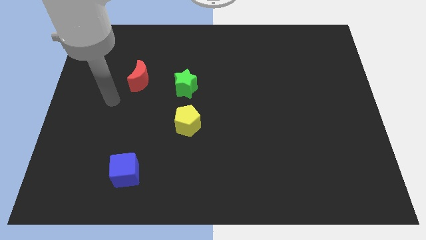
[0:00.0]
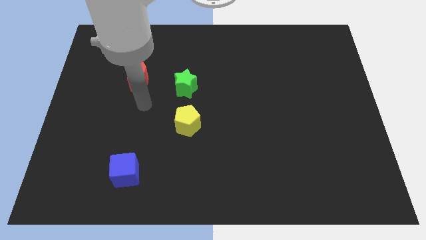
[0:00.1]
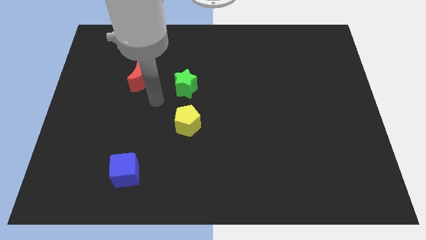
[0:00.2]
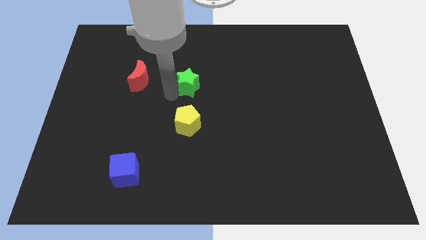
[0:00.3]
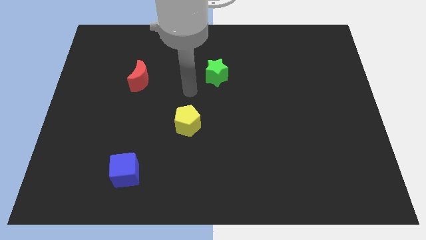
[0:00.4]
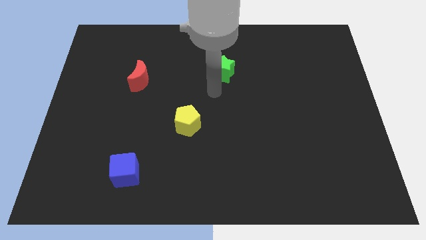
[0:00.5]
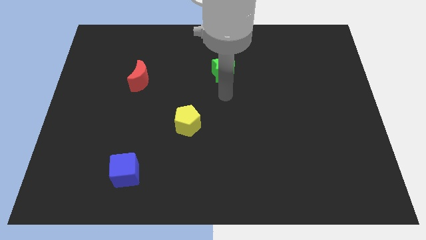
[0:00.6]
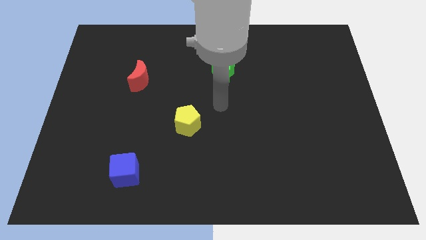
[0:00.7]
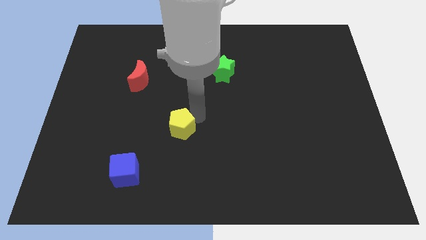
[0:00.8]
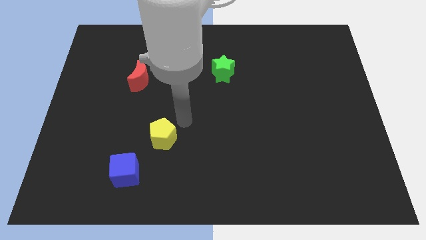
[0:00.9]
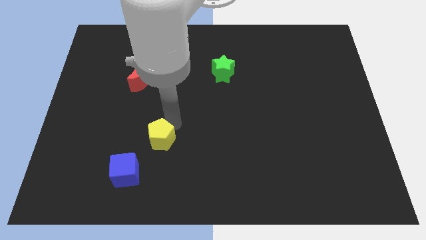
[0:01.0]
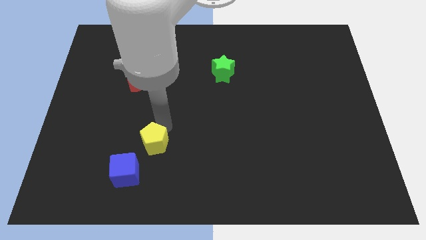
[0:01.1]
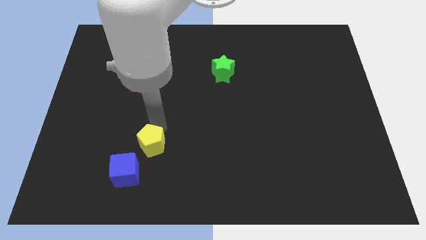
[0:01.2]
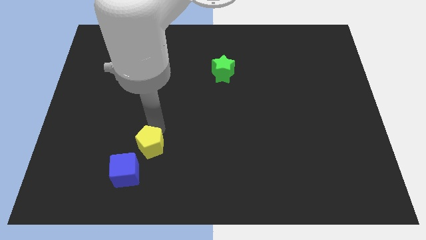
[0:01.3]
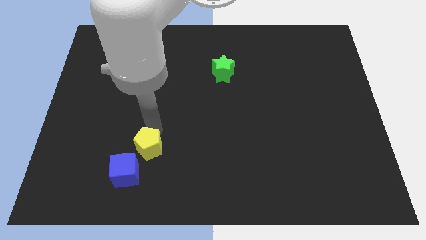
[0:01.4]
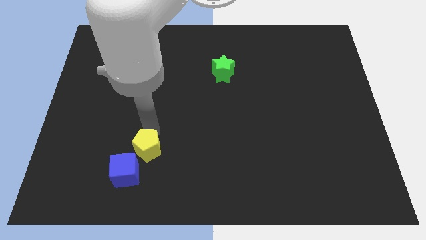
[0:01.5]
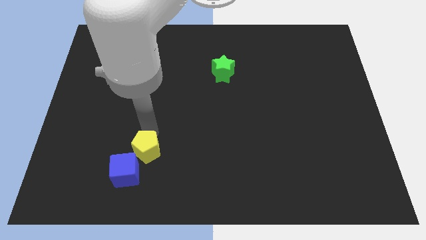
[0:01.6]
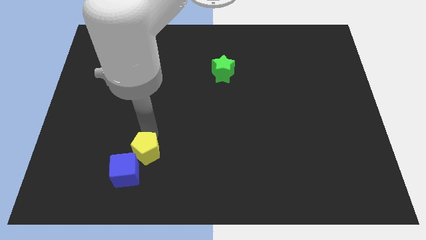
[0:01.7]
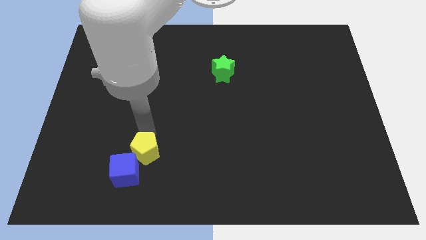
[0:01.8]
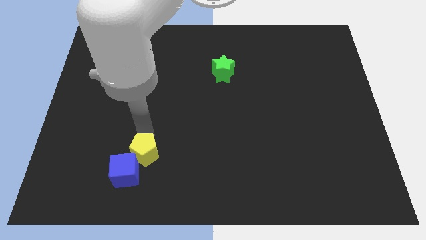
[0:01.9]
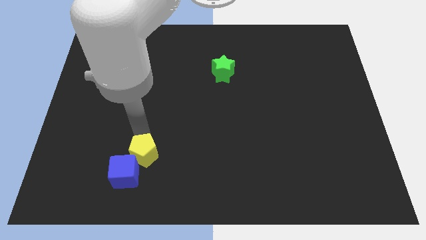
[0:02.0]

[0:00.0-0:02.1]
push the yellow block close to the blue block

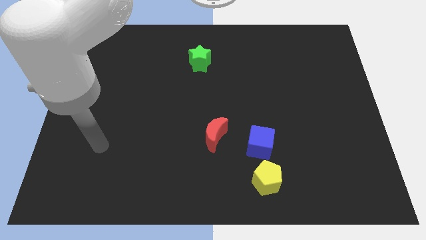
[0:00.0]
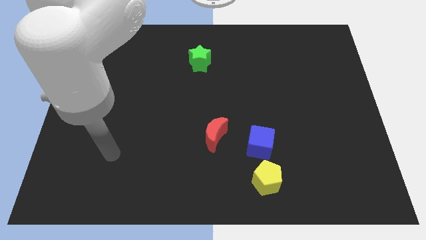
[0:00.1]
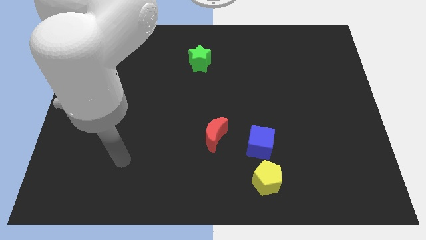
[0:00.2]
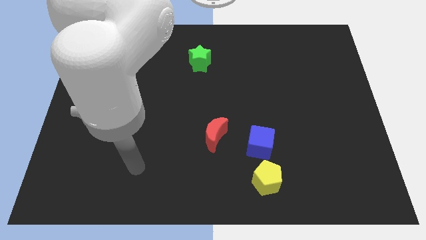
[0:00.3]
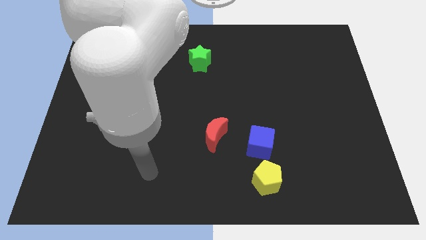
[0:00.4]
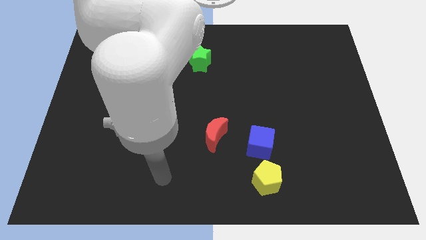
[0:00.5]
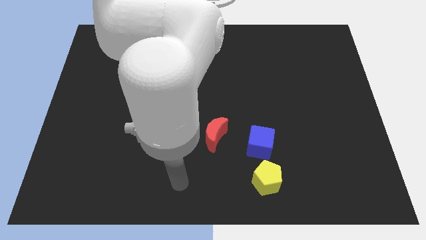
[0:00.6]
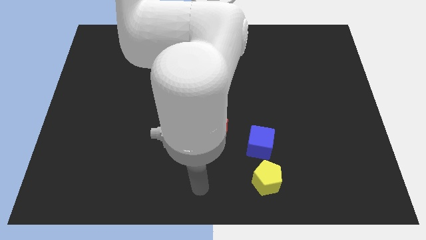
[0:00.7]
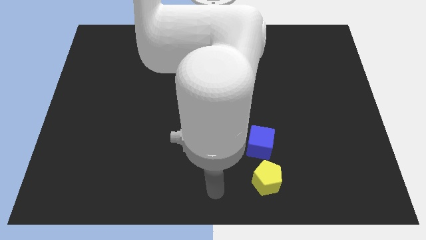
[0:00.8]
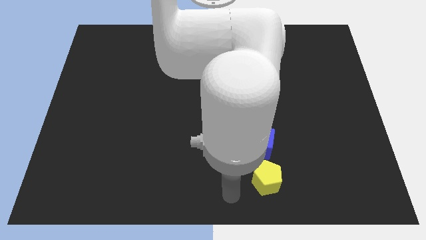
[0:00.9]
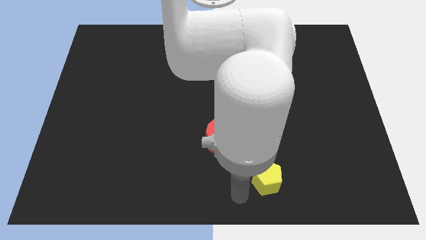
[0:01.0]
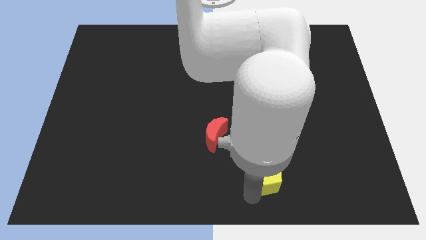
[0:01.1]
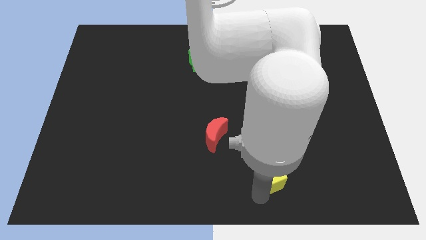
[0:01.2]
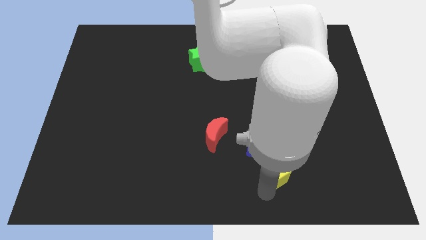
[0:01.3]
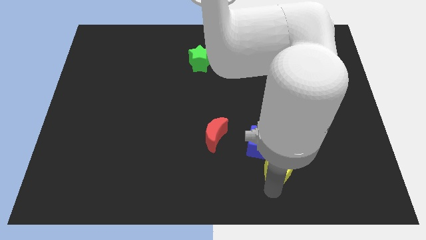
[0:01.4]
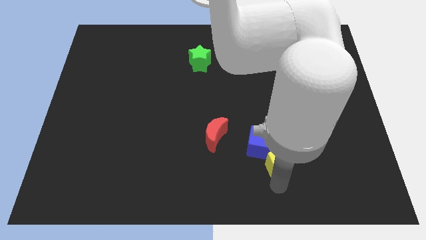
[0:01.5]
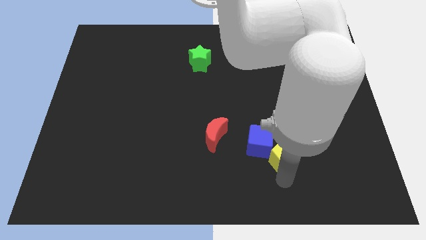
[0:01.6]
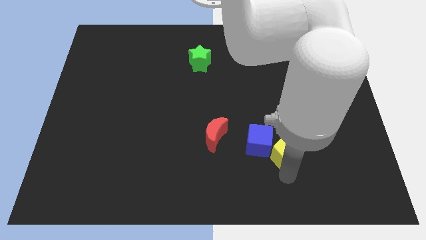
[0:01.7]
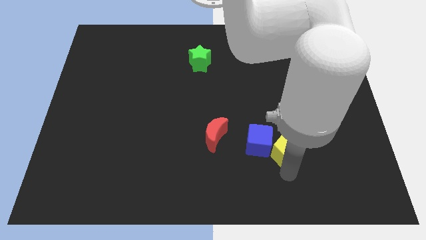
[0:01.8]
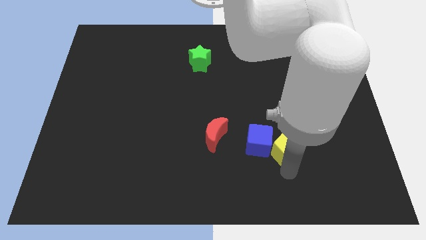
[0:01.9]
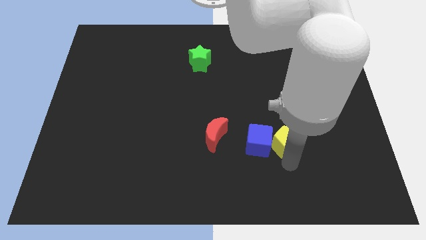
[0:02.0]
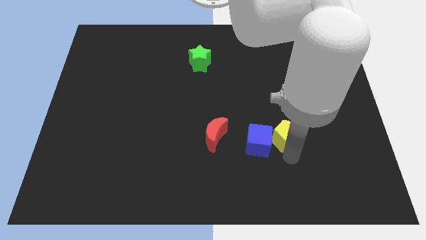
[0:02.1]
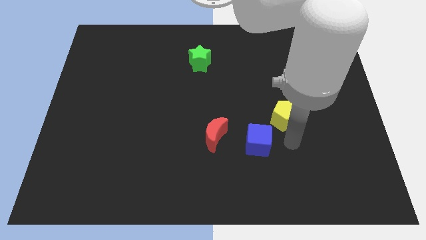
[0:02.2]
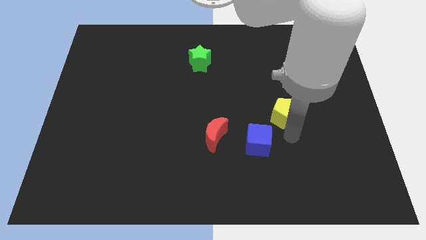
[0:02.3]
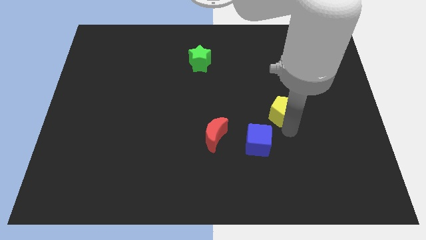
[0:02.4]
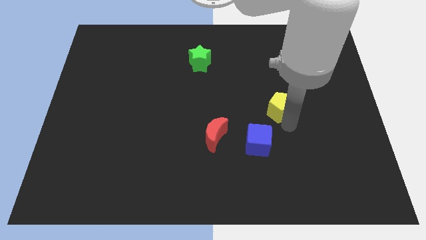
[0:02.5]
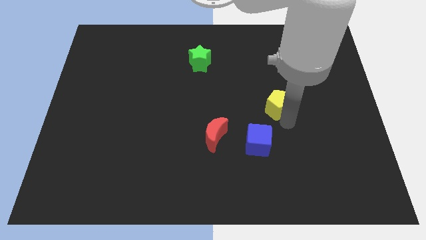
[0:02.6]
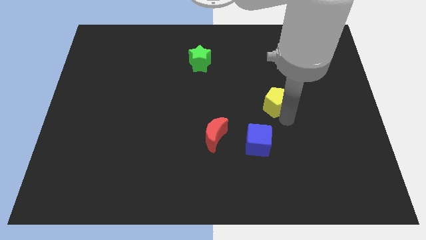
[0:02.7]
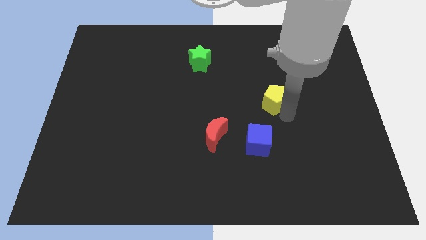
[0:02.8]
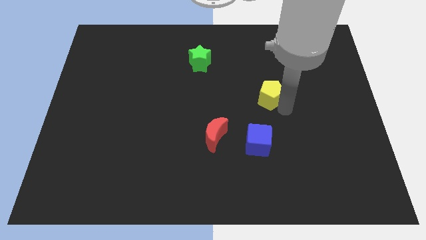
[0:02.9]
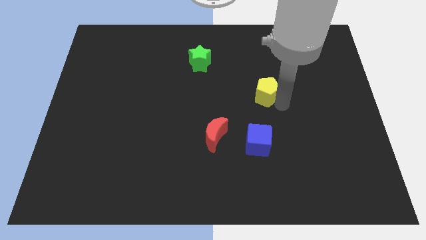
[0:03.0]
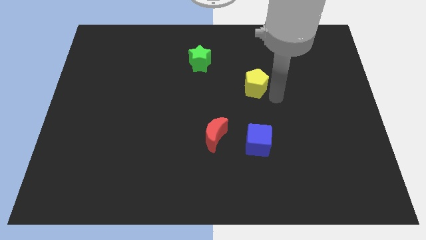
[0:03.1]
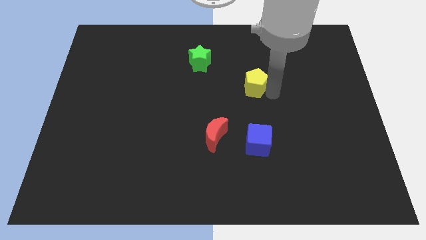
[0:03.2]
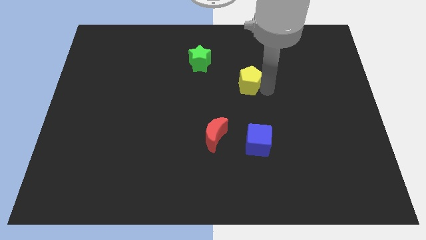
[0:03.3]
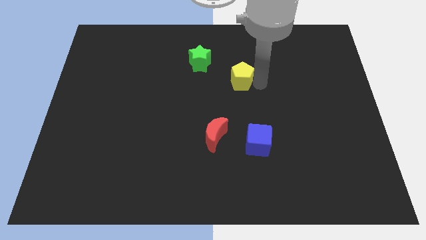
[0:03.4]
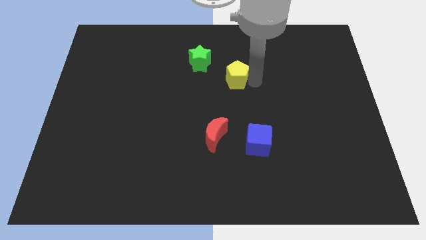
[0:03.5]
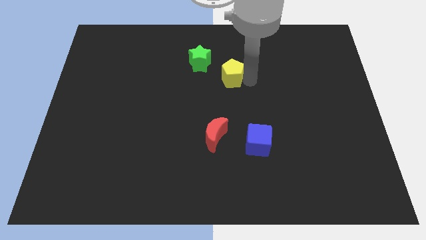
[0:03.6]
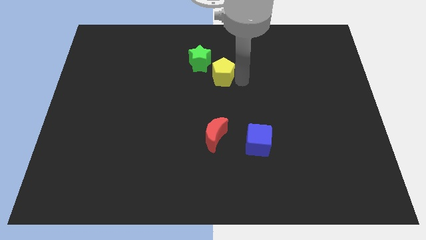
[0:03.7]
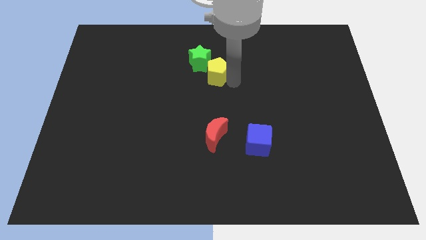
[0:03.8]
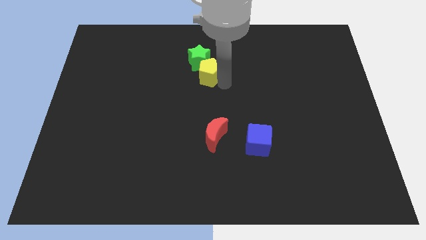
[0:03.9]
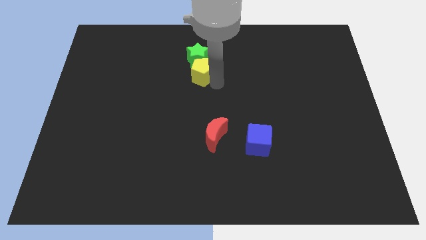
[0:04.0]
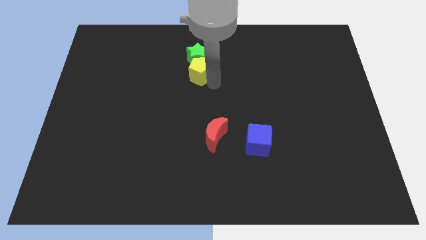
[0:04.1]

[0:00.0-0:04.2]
put the yellow pentagon close to the green star

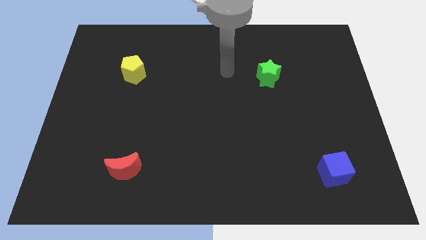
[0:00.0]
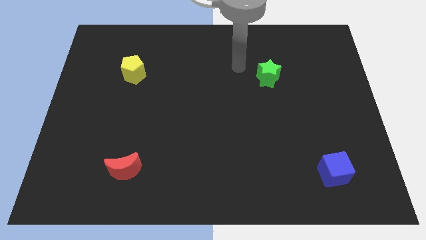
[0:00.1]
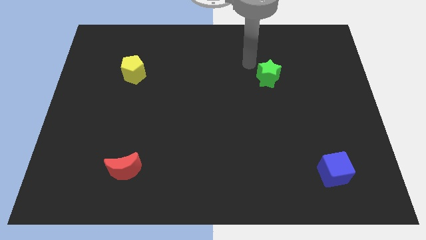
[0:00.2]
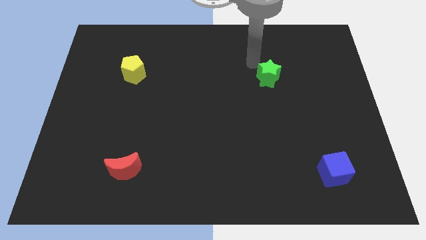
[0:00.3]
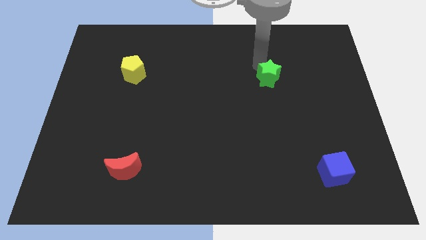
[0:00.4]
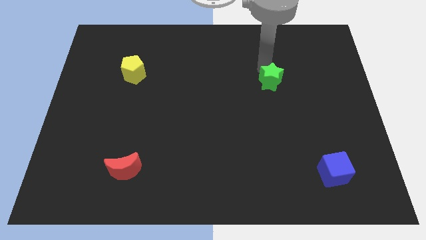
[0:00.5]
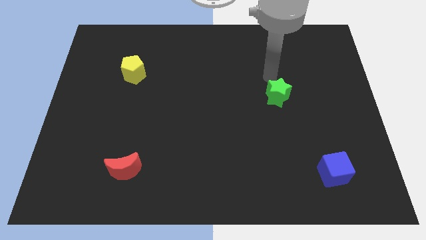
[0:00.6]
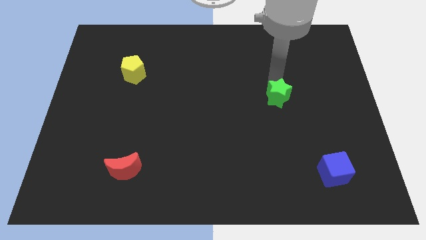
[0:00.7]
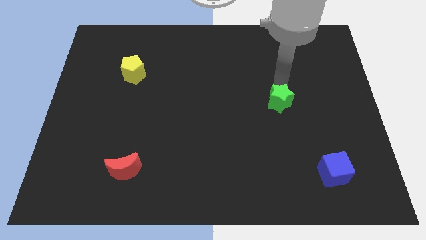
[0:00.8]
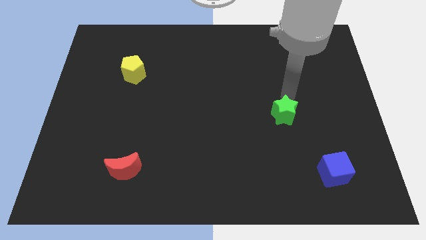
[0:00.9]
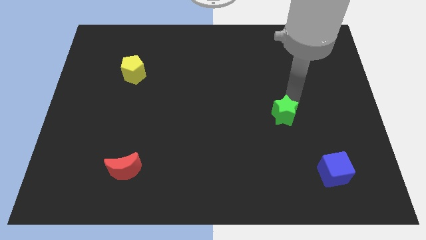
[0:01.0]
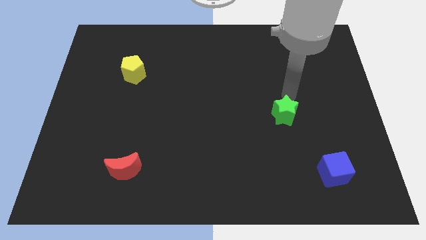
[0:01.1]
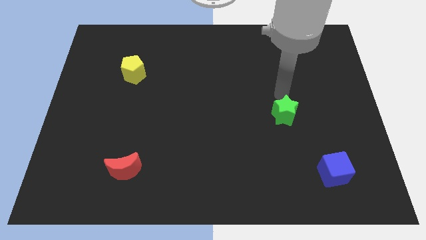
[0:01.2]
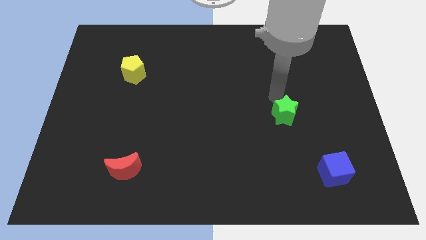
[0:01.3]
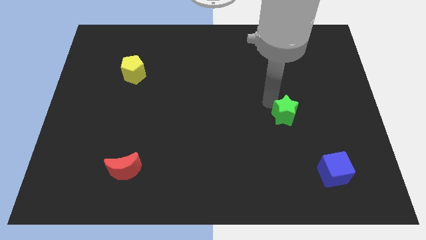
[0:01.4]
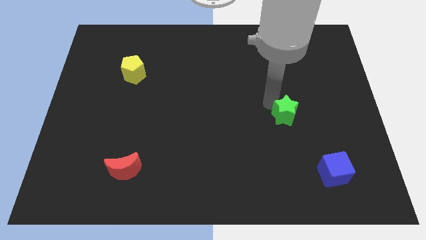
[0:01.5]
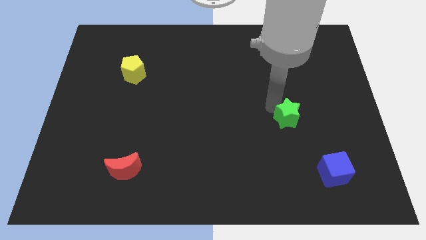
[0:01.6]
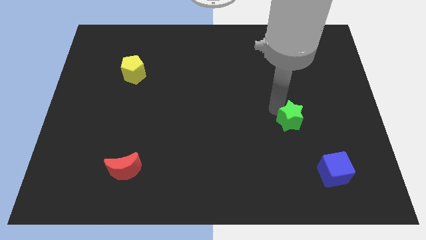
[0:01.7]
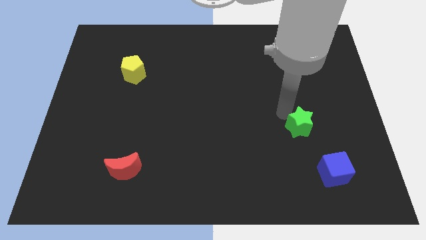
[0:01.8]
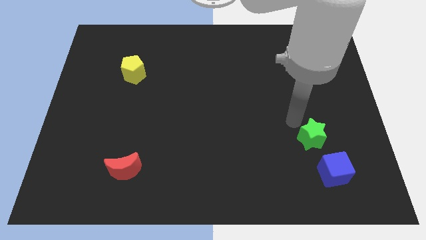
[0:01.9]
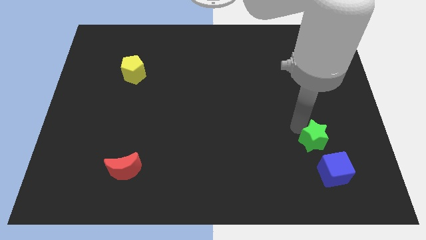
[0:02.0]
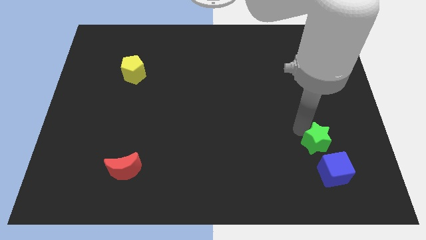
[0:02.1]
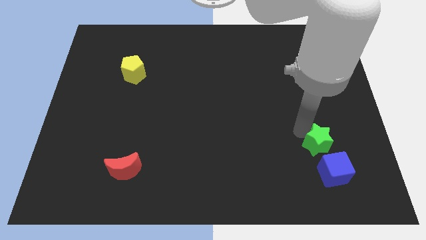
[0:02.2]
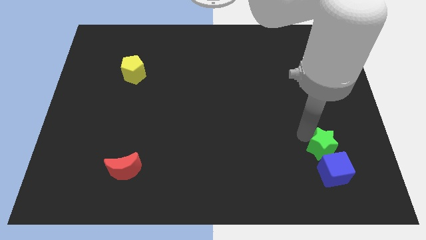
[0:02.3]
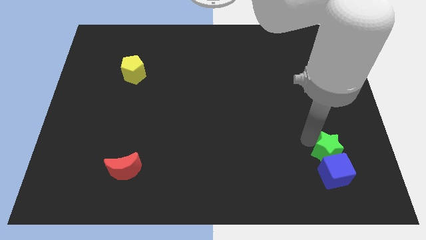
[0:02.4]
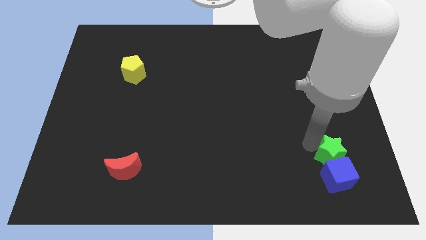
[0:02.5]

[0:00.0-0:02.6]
move the star close to the blue block

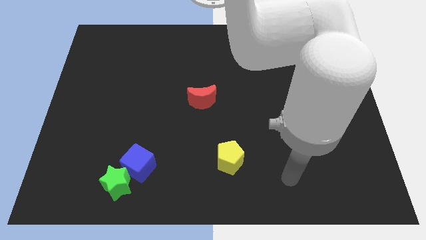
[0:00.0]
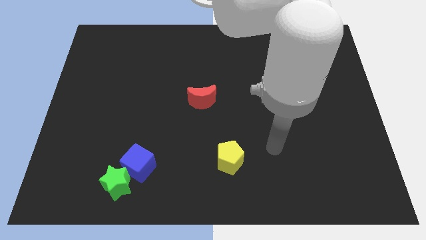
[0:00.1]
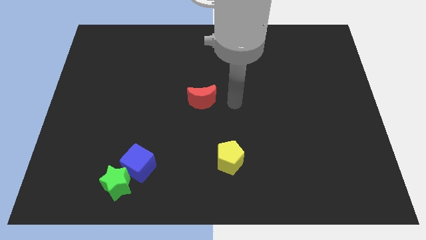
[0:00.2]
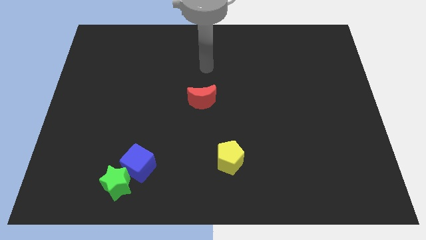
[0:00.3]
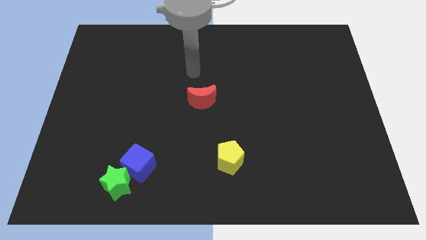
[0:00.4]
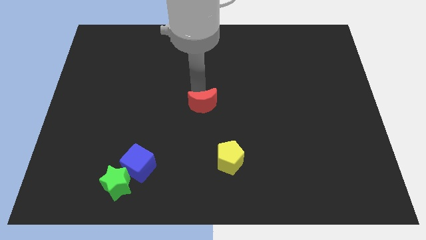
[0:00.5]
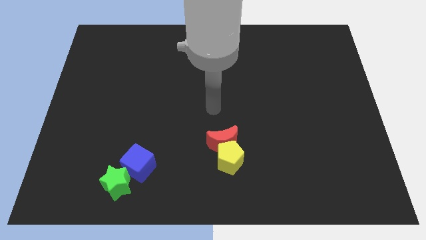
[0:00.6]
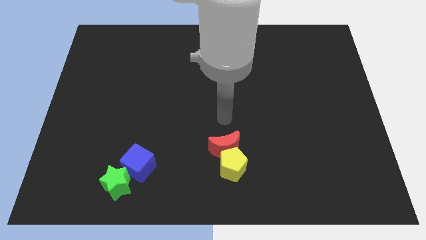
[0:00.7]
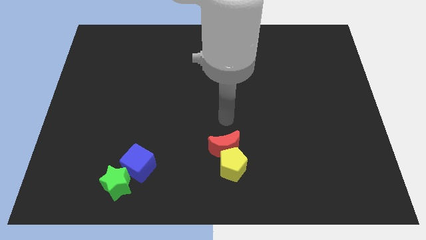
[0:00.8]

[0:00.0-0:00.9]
put the red block next to the pentagon
